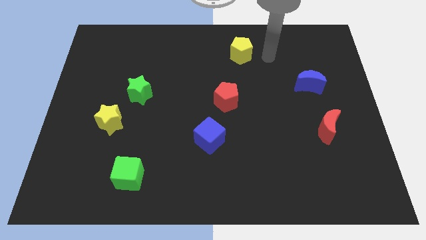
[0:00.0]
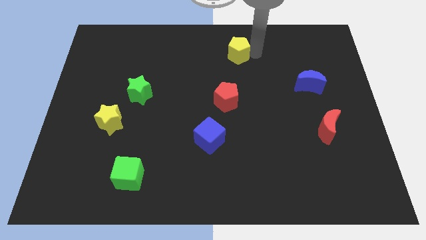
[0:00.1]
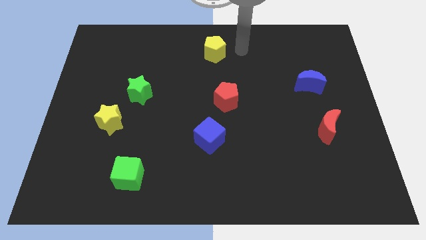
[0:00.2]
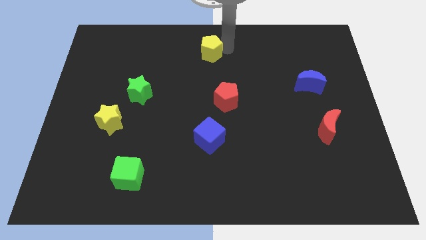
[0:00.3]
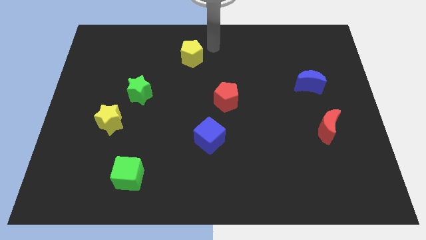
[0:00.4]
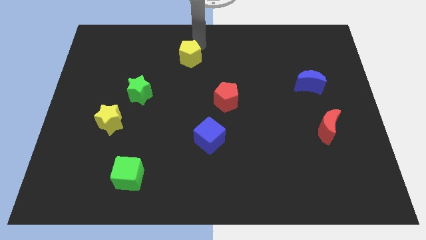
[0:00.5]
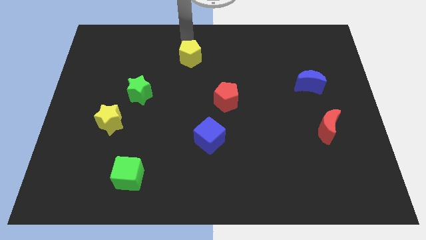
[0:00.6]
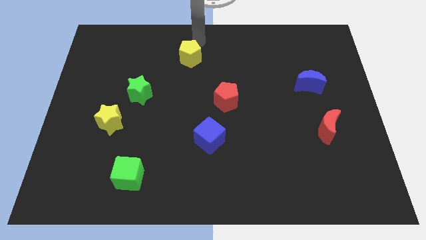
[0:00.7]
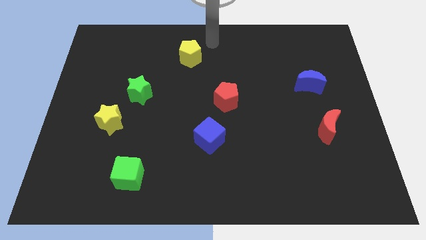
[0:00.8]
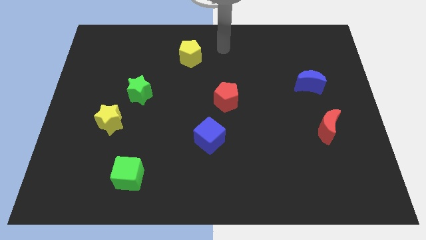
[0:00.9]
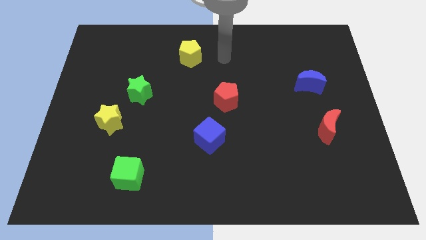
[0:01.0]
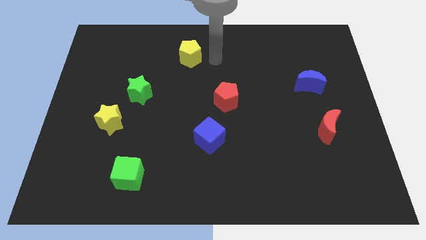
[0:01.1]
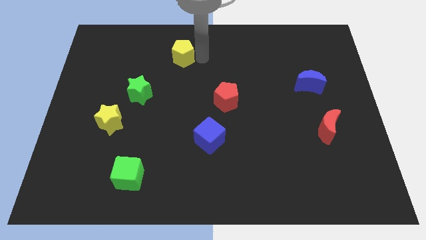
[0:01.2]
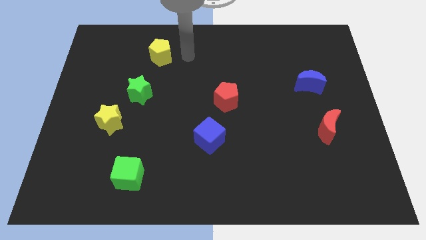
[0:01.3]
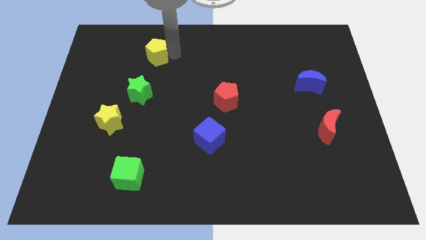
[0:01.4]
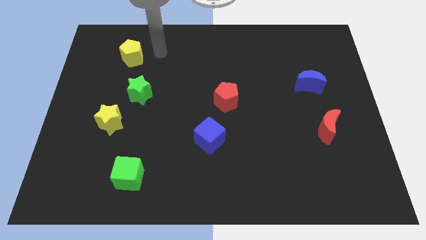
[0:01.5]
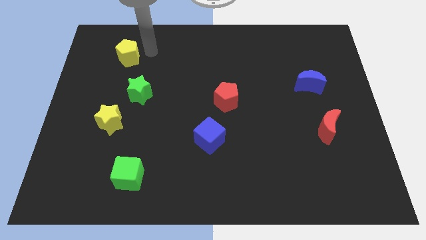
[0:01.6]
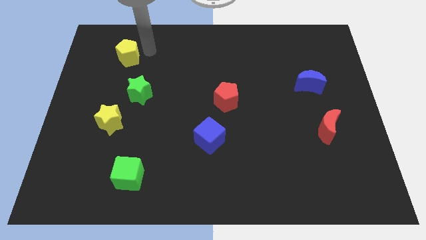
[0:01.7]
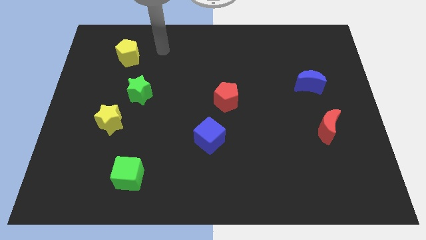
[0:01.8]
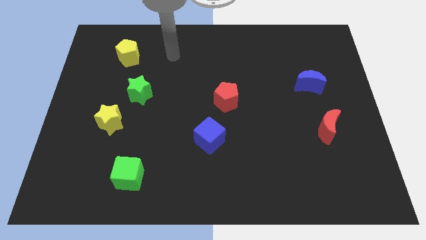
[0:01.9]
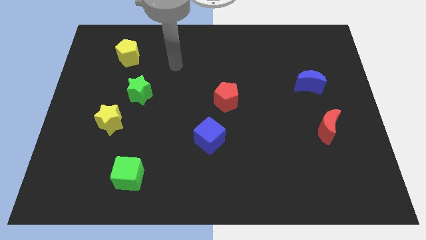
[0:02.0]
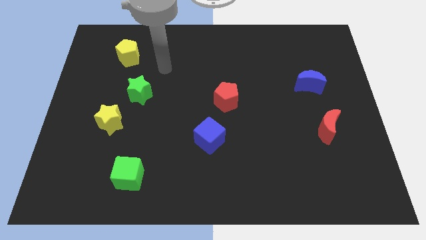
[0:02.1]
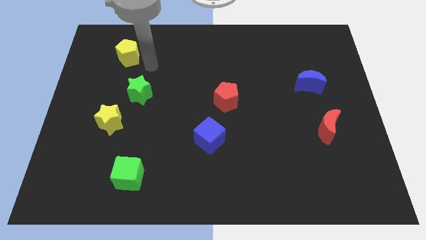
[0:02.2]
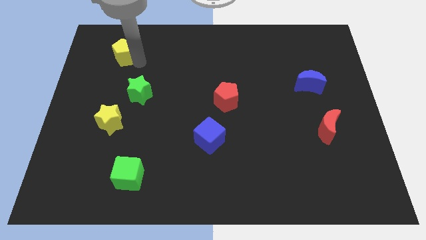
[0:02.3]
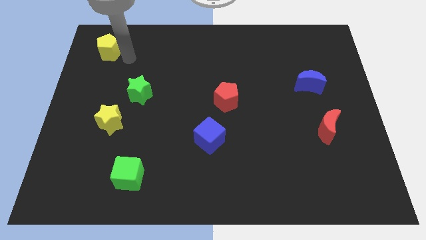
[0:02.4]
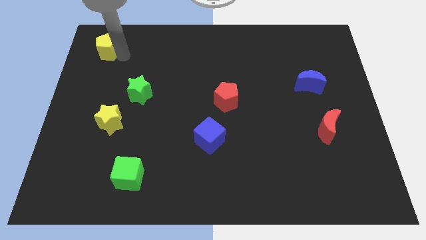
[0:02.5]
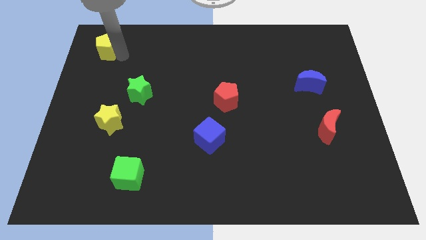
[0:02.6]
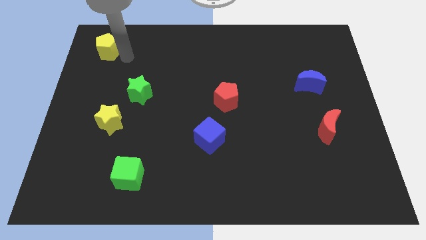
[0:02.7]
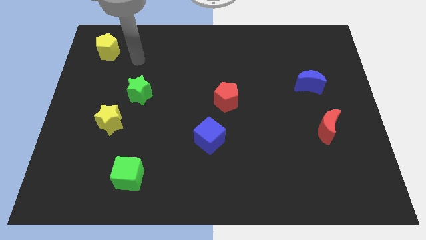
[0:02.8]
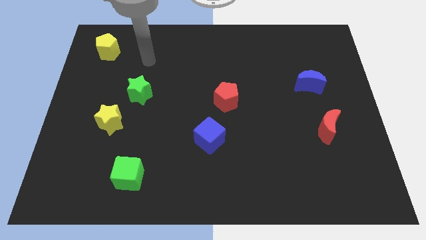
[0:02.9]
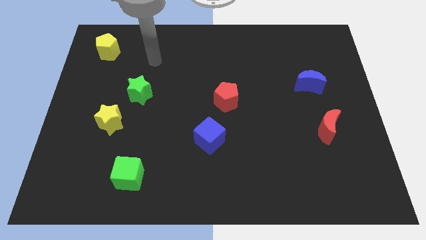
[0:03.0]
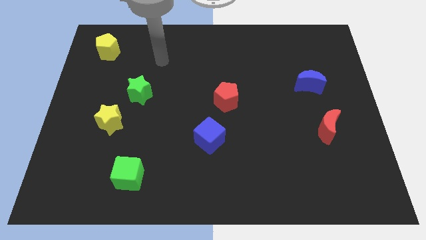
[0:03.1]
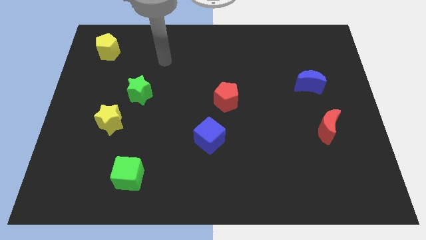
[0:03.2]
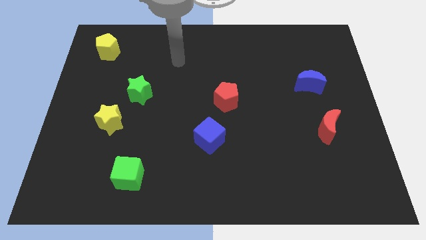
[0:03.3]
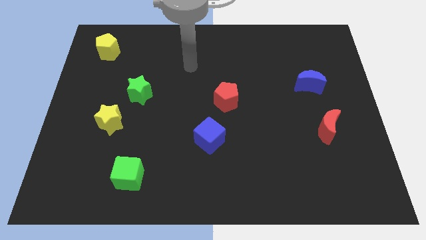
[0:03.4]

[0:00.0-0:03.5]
move the yellow pentagon to the top left corner of the board

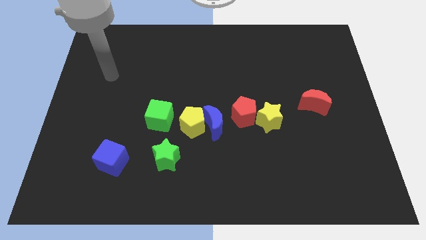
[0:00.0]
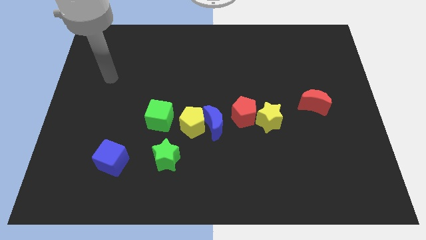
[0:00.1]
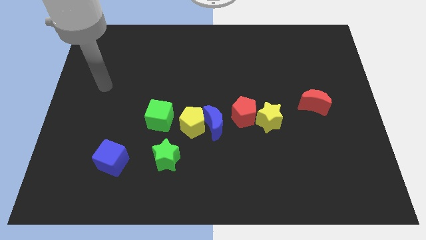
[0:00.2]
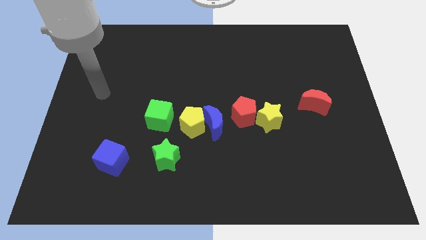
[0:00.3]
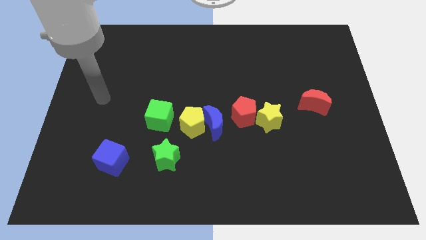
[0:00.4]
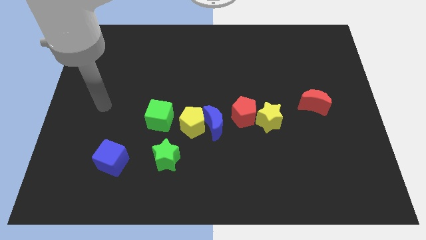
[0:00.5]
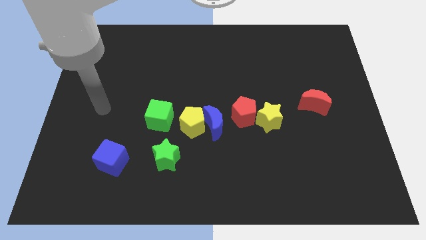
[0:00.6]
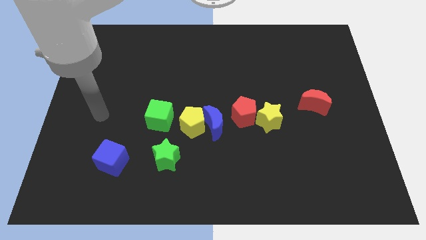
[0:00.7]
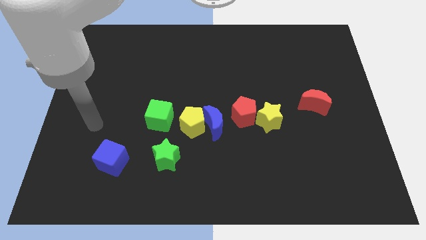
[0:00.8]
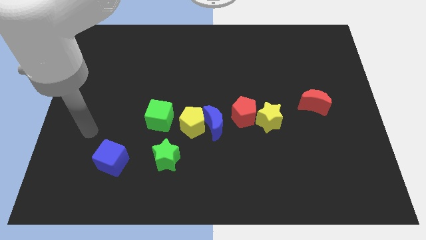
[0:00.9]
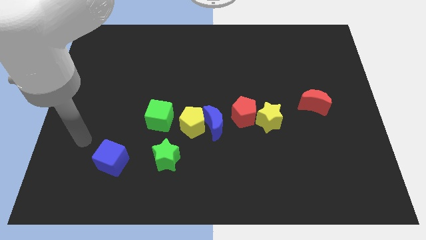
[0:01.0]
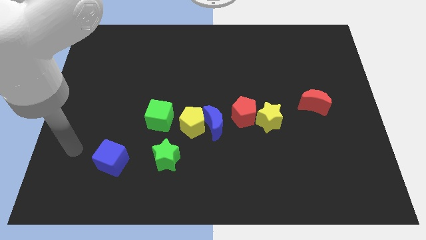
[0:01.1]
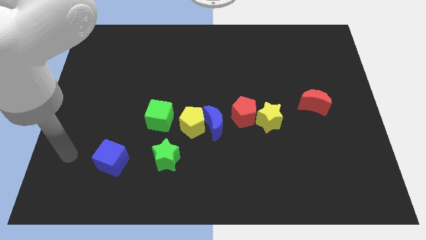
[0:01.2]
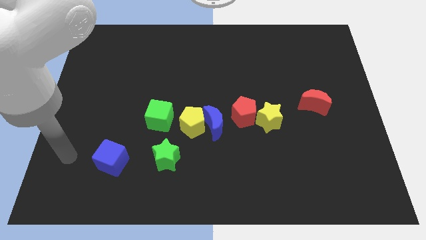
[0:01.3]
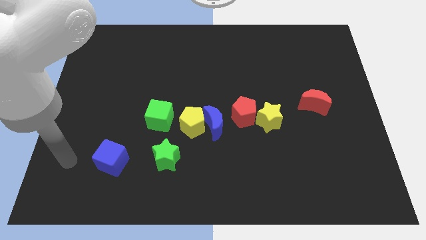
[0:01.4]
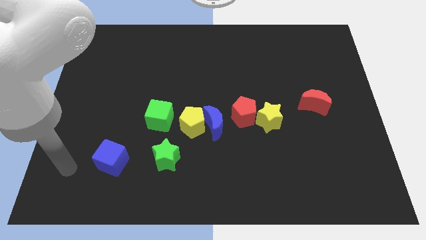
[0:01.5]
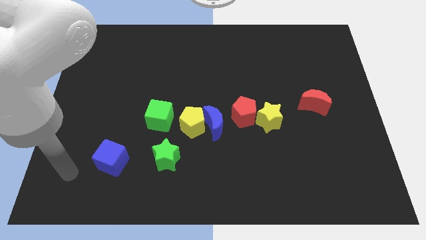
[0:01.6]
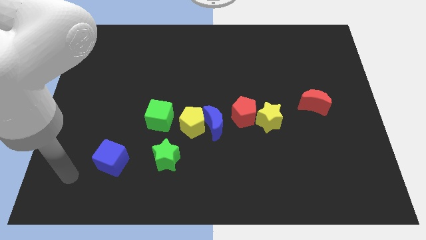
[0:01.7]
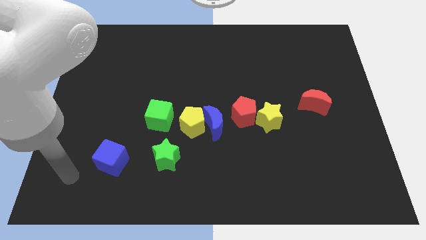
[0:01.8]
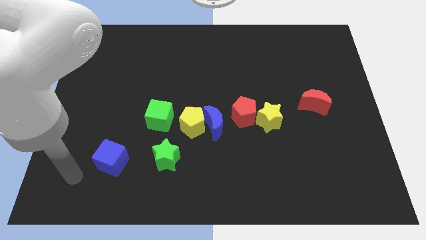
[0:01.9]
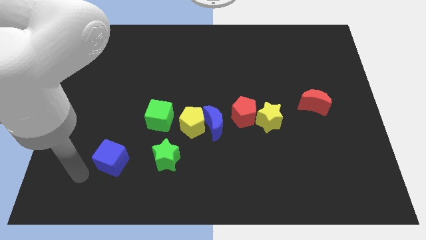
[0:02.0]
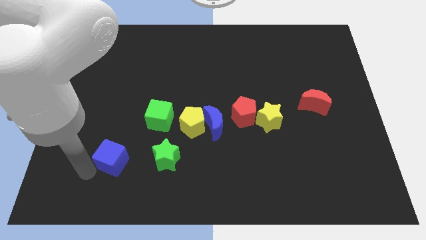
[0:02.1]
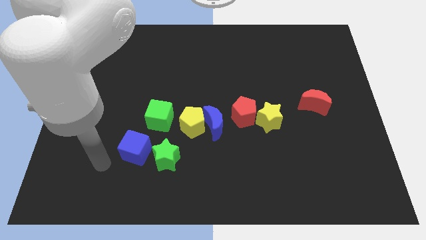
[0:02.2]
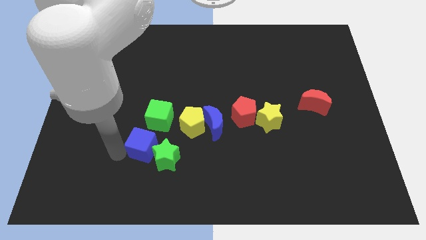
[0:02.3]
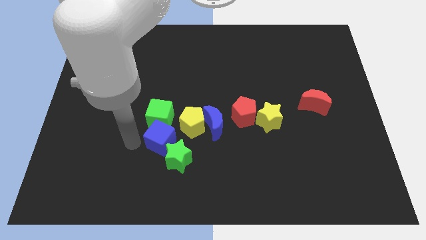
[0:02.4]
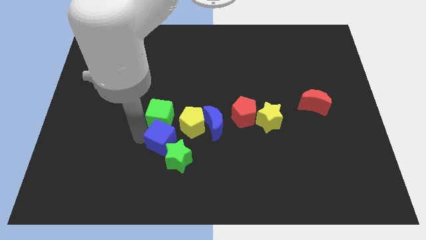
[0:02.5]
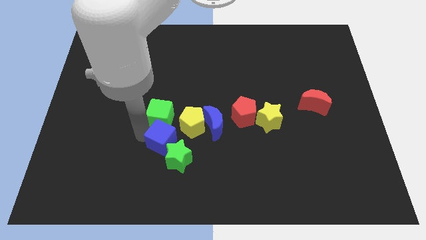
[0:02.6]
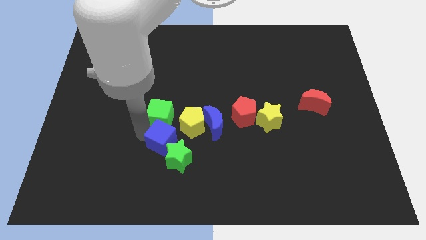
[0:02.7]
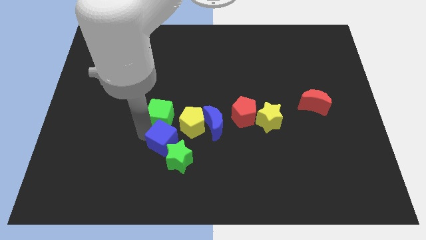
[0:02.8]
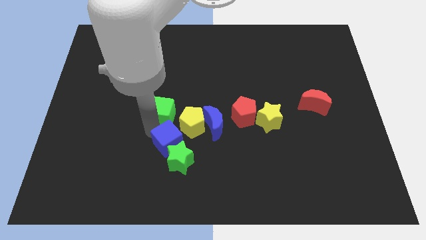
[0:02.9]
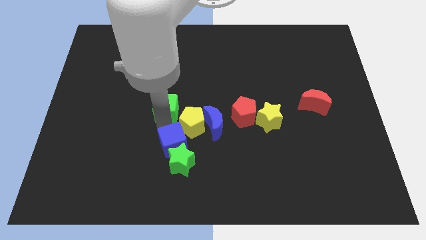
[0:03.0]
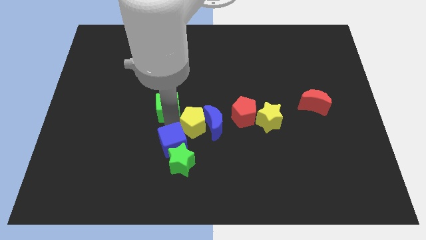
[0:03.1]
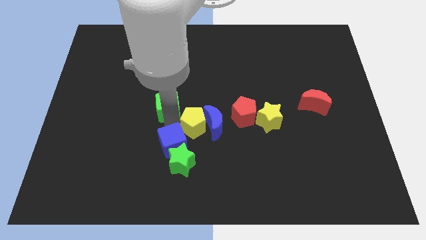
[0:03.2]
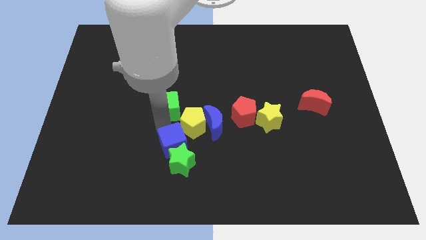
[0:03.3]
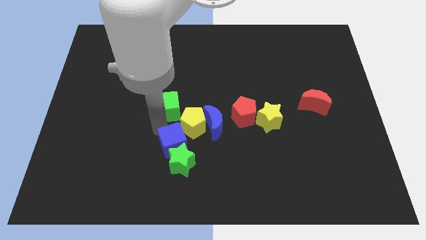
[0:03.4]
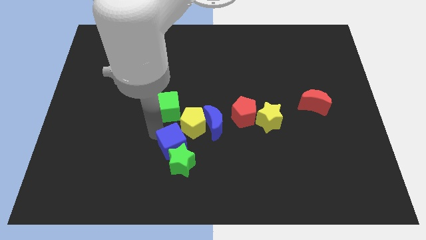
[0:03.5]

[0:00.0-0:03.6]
place the blue cube in between the green cube and the green star

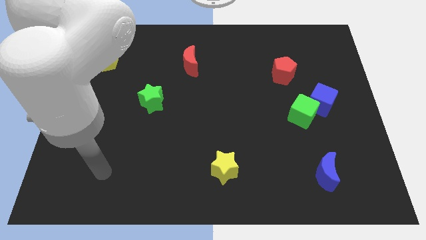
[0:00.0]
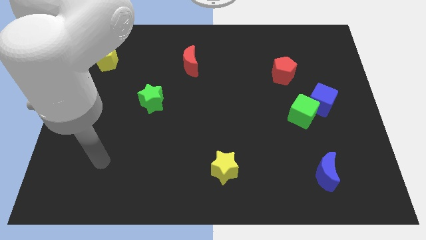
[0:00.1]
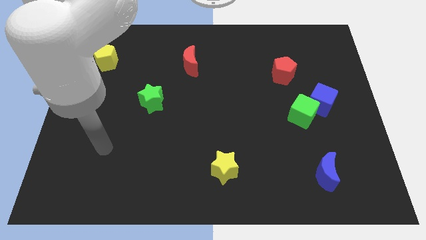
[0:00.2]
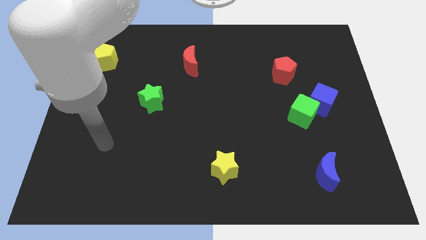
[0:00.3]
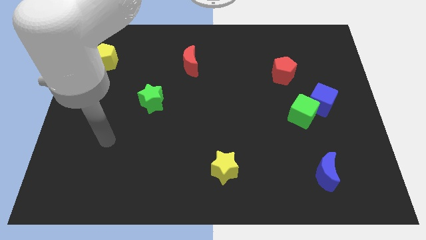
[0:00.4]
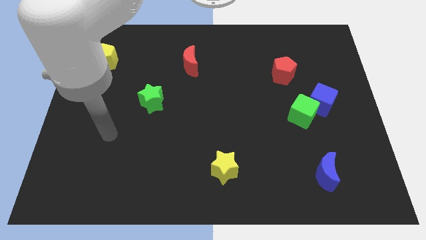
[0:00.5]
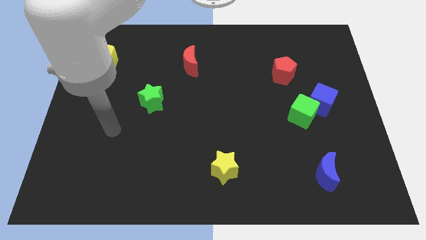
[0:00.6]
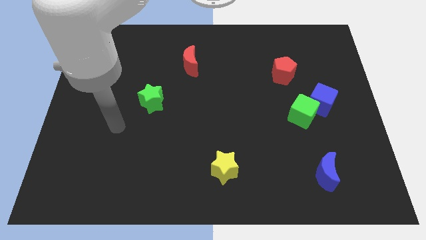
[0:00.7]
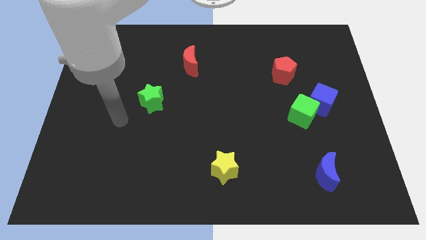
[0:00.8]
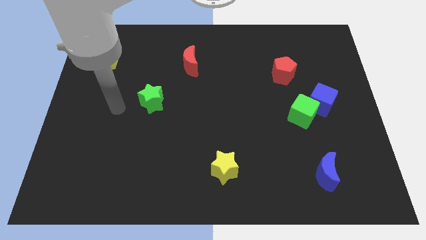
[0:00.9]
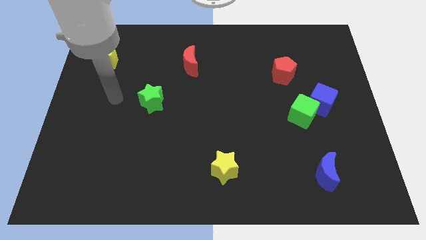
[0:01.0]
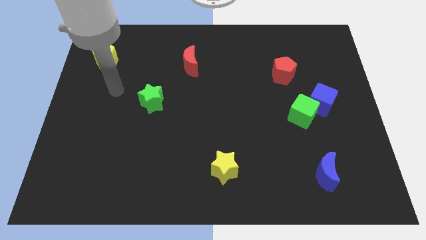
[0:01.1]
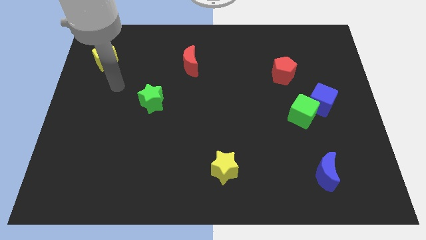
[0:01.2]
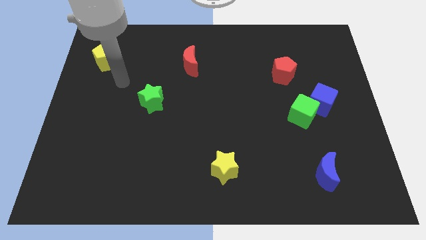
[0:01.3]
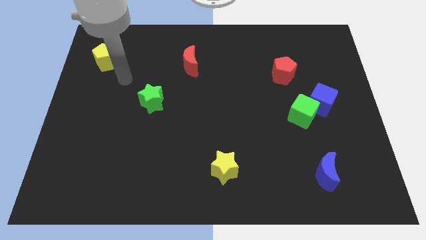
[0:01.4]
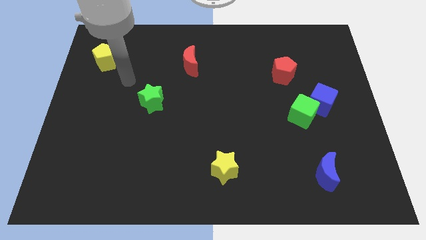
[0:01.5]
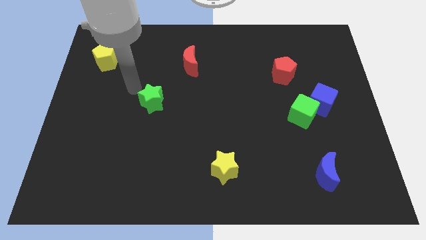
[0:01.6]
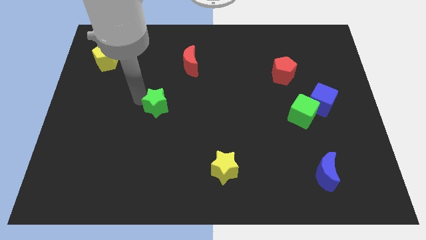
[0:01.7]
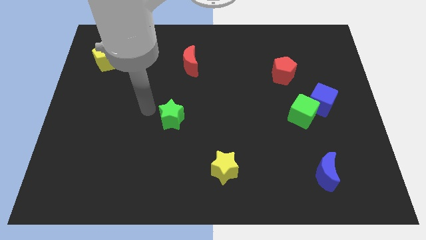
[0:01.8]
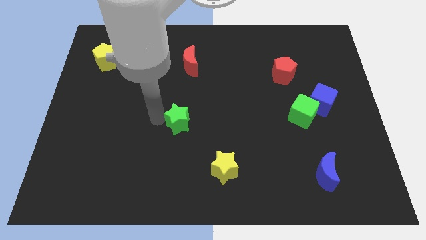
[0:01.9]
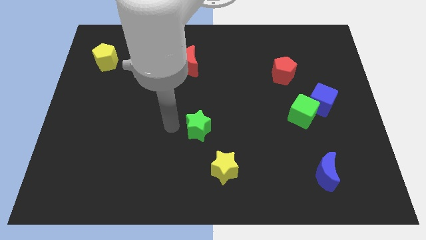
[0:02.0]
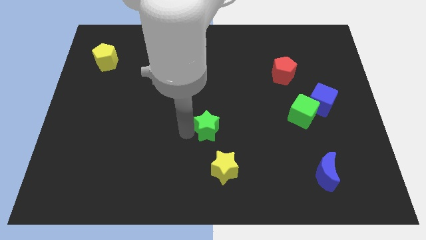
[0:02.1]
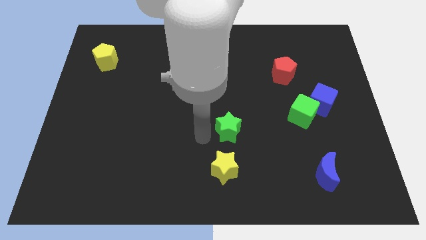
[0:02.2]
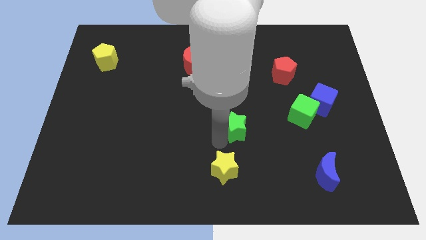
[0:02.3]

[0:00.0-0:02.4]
put the green star above the yellow star
